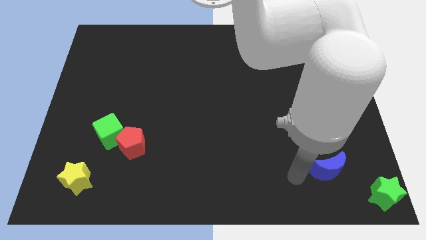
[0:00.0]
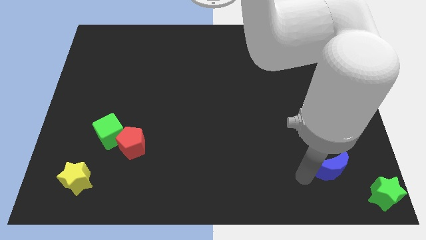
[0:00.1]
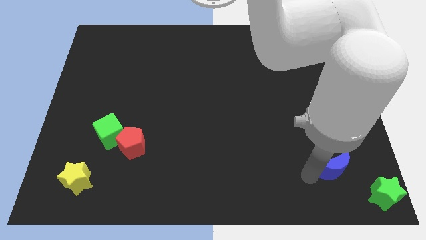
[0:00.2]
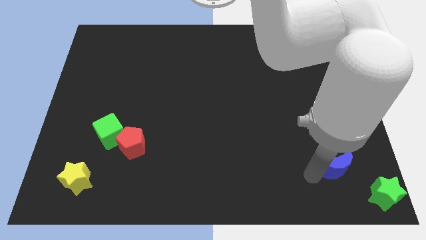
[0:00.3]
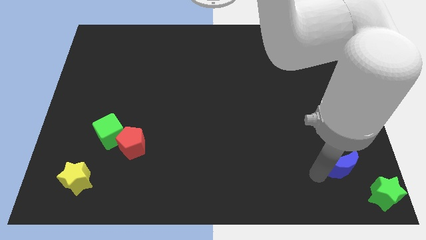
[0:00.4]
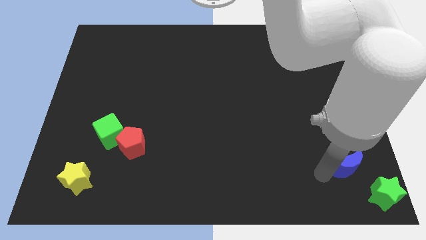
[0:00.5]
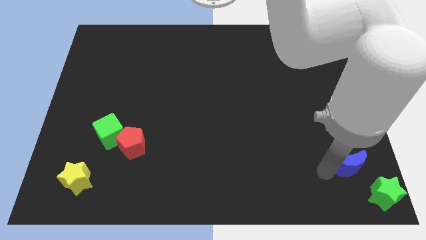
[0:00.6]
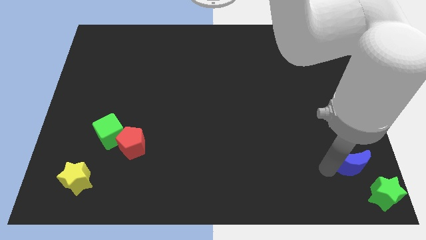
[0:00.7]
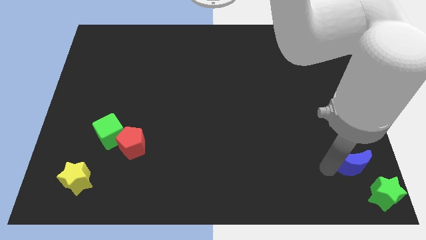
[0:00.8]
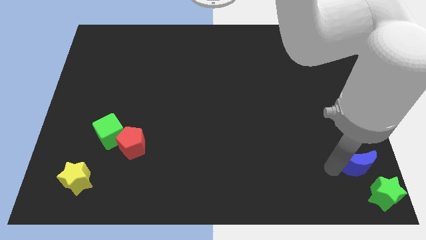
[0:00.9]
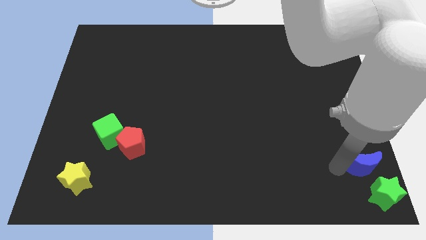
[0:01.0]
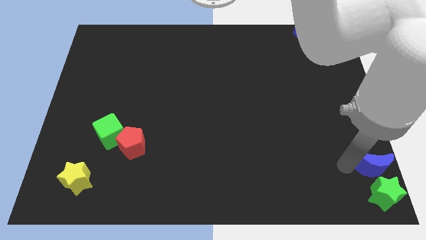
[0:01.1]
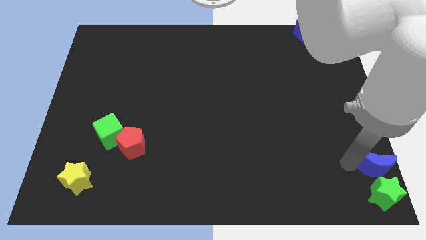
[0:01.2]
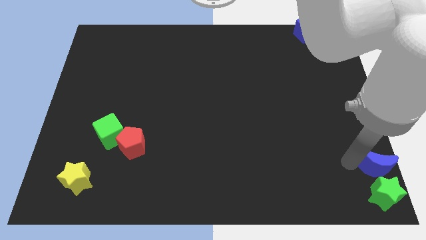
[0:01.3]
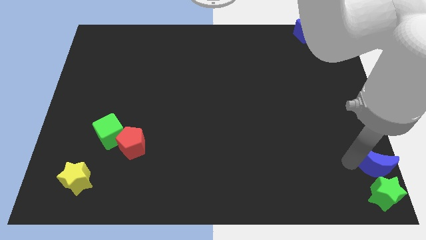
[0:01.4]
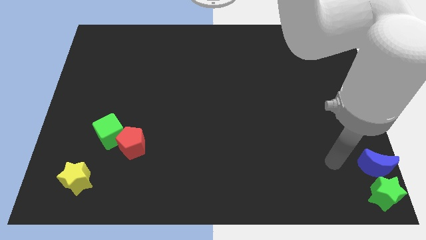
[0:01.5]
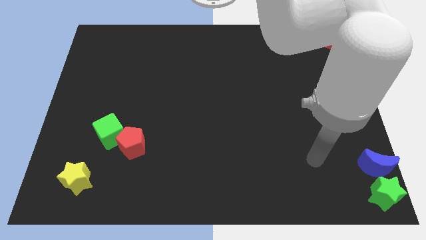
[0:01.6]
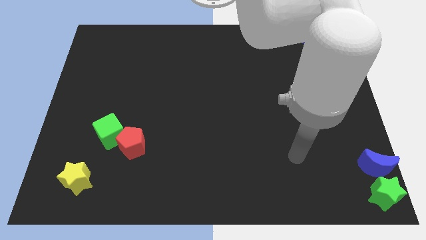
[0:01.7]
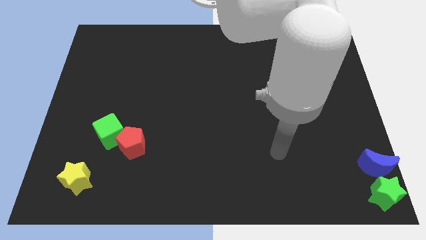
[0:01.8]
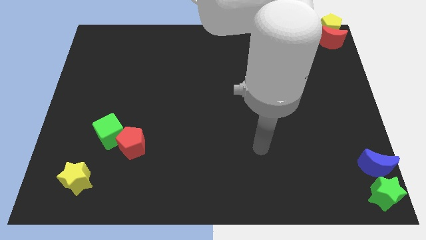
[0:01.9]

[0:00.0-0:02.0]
put the blue cube at the bottom right corner

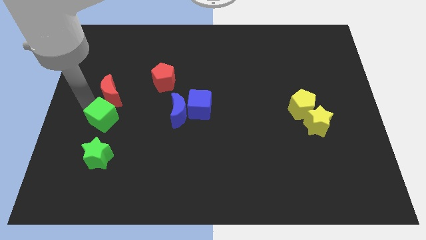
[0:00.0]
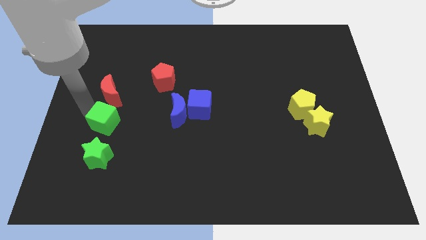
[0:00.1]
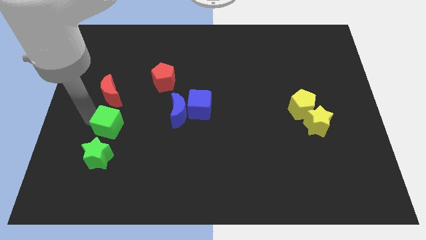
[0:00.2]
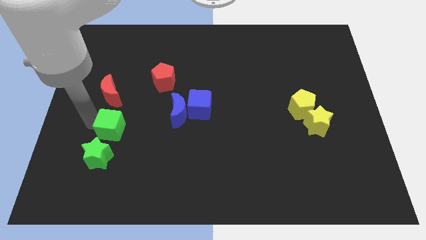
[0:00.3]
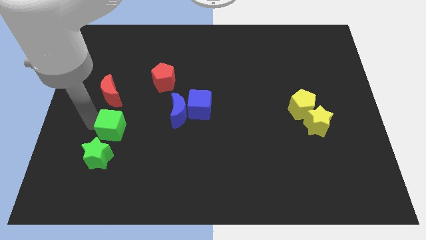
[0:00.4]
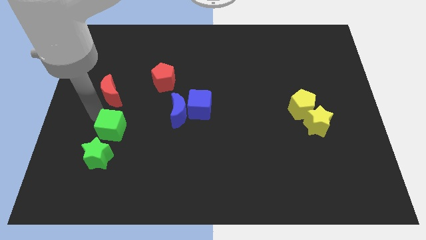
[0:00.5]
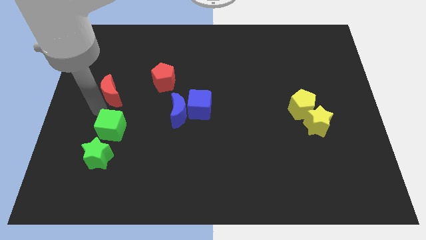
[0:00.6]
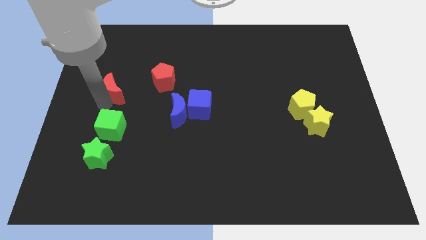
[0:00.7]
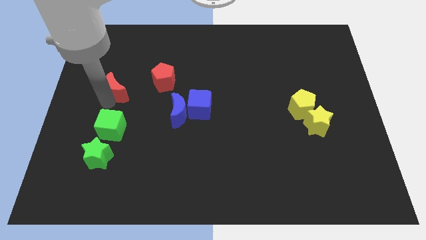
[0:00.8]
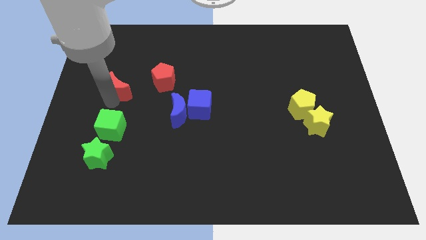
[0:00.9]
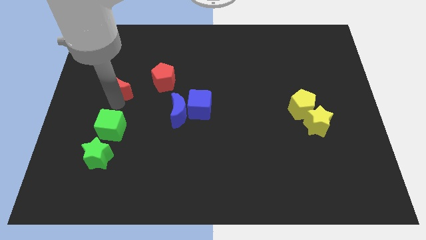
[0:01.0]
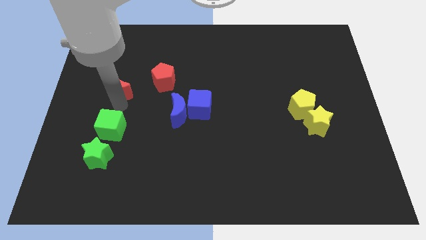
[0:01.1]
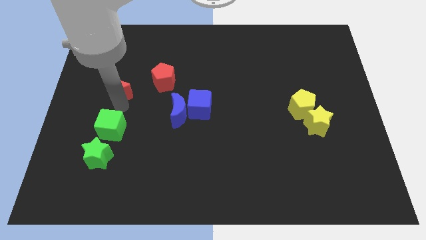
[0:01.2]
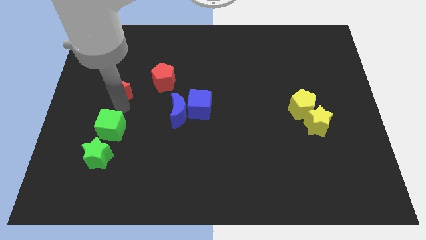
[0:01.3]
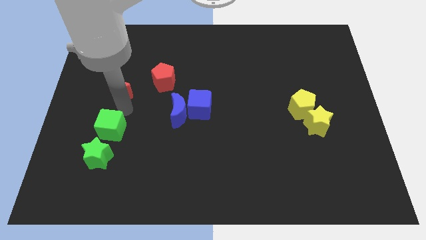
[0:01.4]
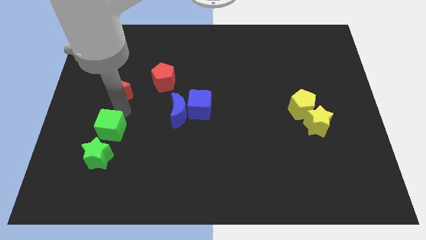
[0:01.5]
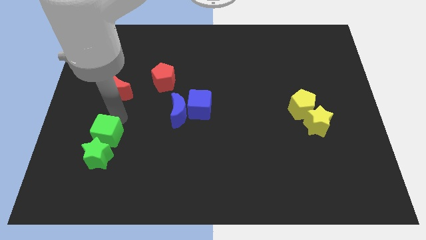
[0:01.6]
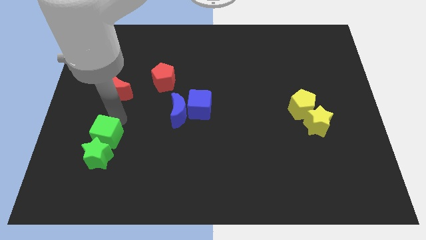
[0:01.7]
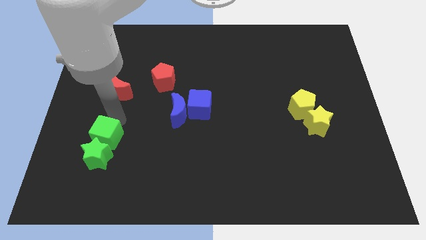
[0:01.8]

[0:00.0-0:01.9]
move the green cube to the top of green star

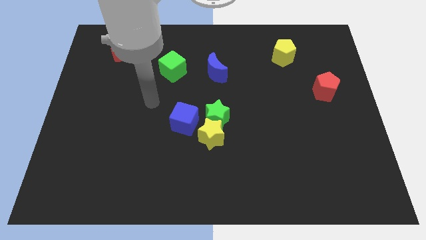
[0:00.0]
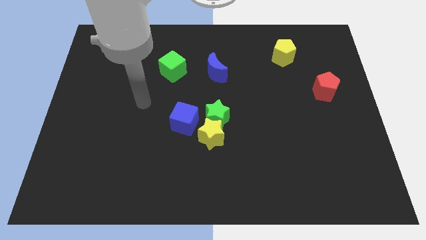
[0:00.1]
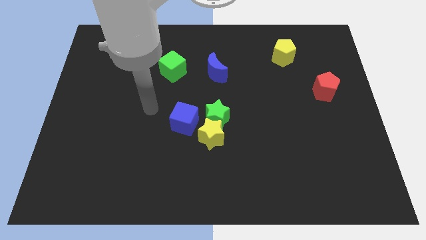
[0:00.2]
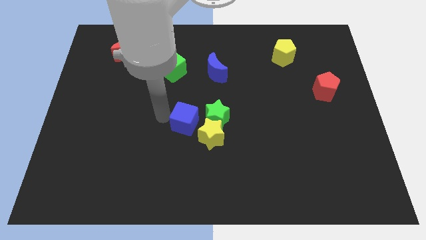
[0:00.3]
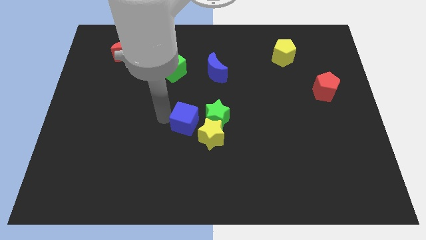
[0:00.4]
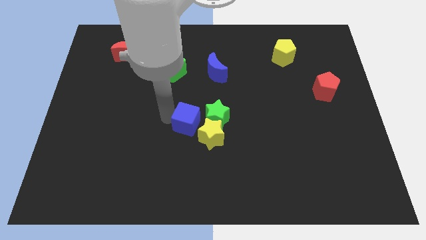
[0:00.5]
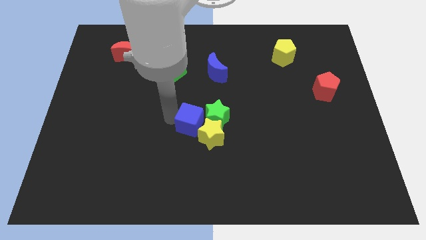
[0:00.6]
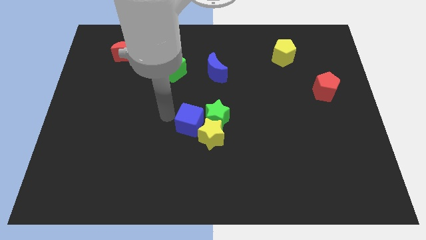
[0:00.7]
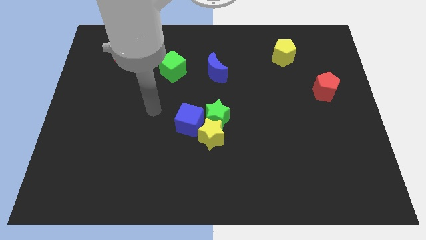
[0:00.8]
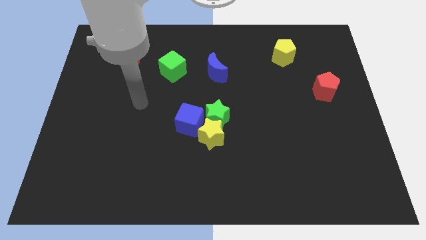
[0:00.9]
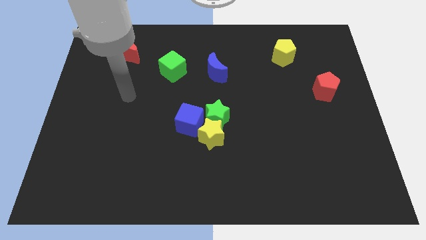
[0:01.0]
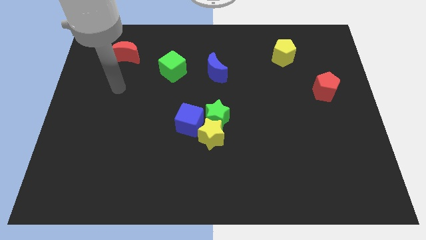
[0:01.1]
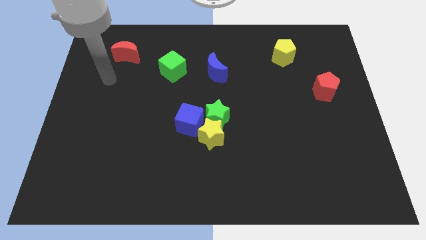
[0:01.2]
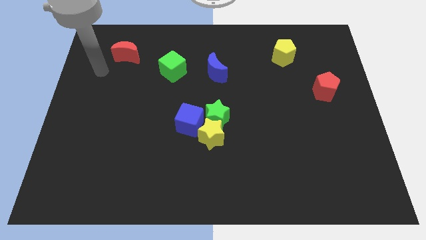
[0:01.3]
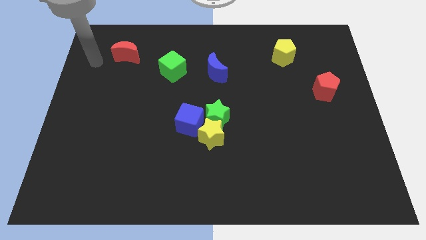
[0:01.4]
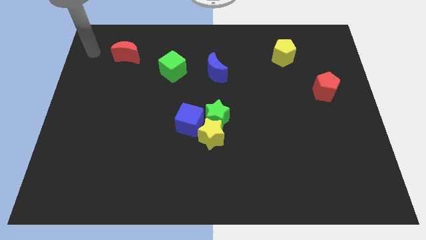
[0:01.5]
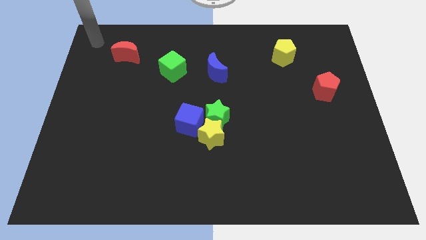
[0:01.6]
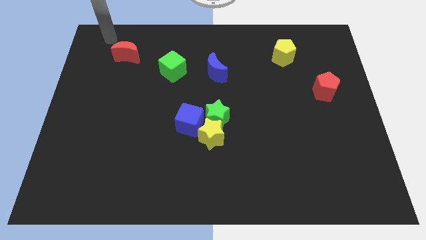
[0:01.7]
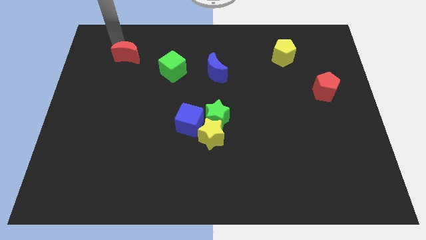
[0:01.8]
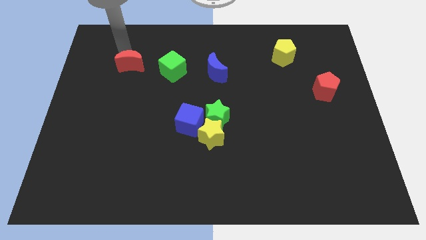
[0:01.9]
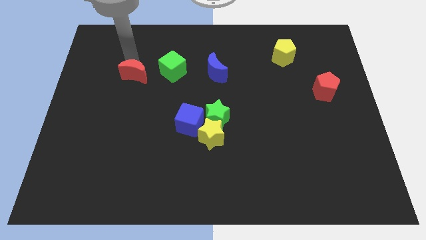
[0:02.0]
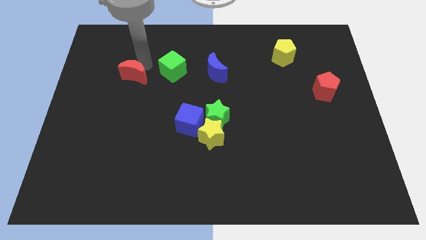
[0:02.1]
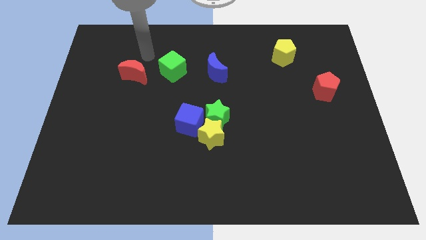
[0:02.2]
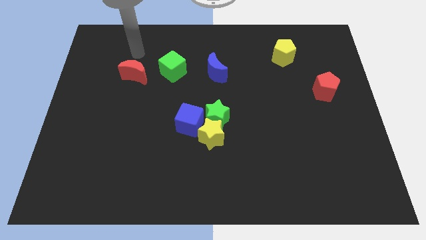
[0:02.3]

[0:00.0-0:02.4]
slightly push the red crescent left side to the green cube

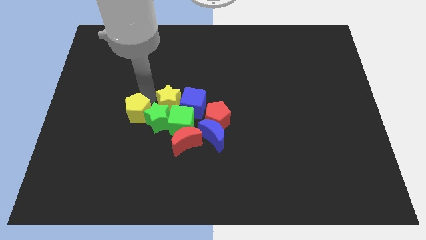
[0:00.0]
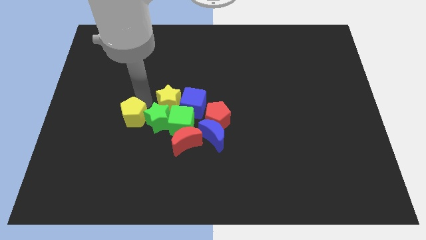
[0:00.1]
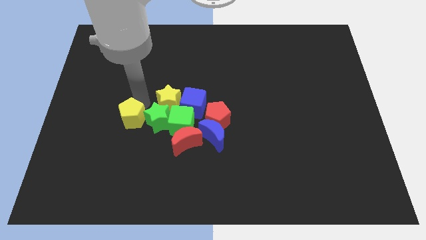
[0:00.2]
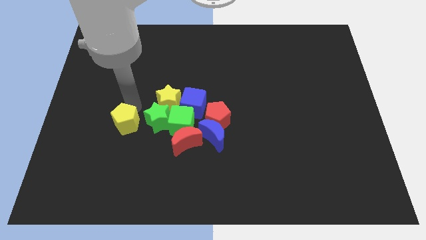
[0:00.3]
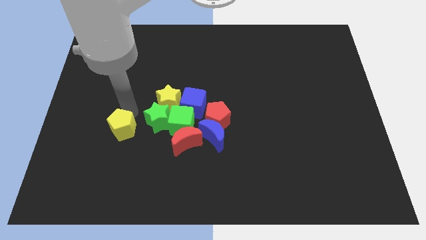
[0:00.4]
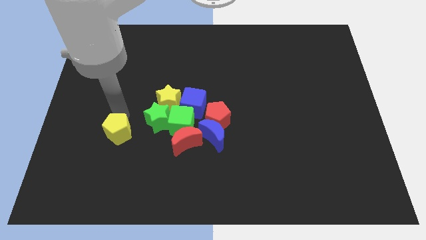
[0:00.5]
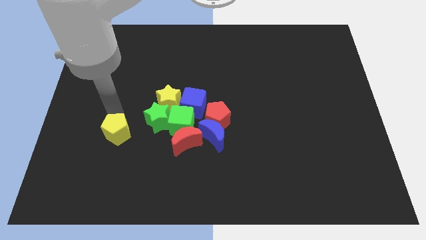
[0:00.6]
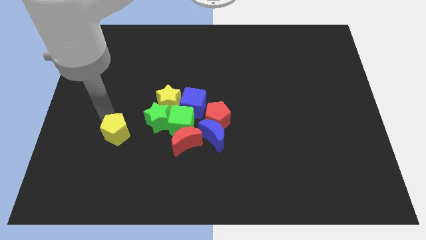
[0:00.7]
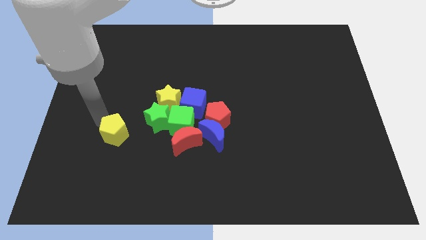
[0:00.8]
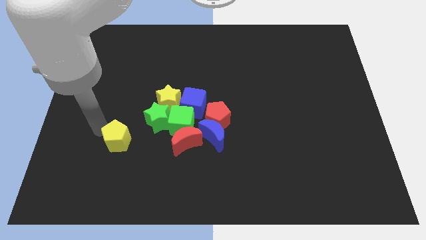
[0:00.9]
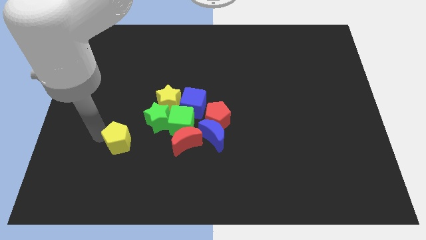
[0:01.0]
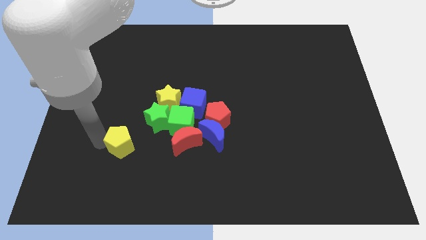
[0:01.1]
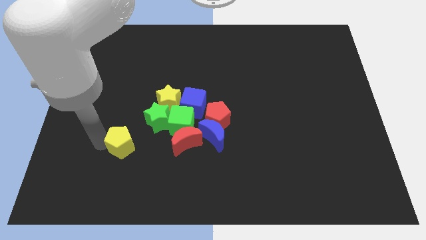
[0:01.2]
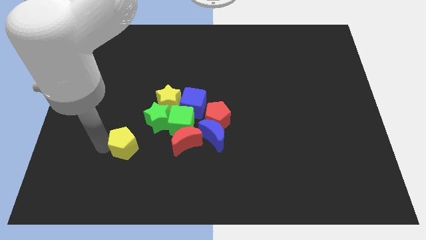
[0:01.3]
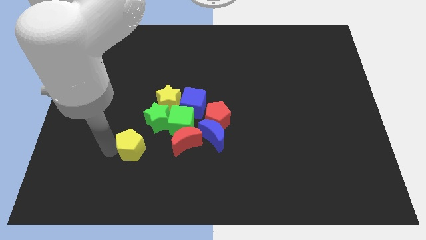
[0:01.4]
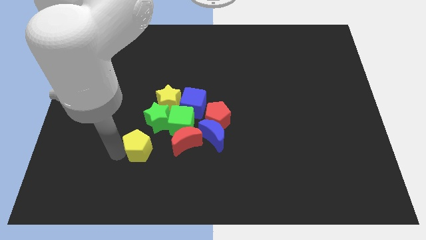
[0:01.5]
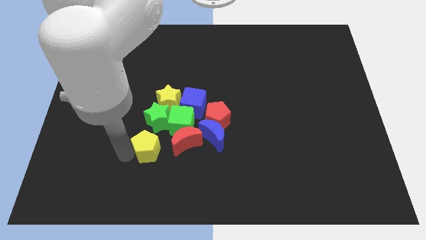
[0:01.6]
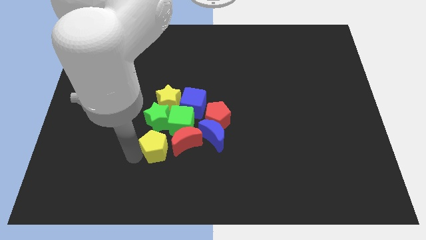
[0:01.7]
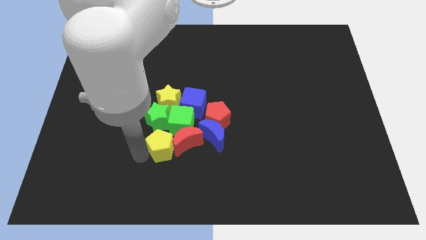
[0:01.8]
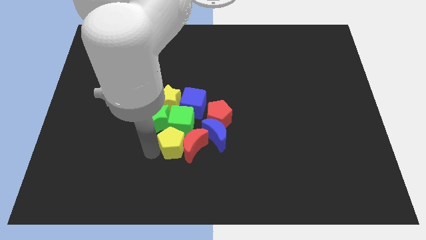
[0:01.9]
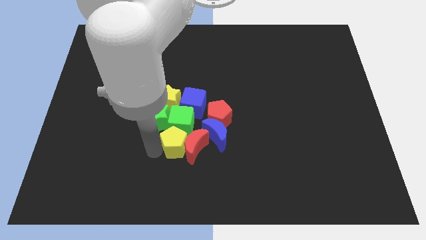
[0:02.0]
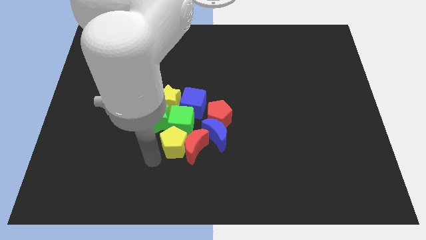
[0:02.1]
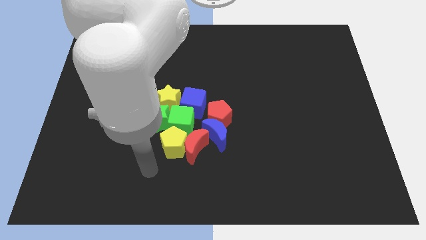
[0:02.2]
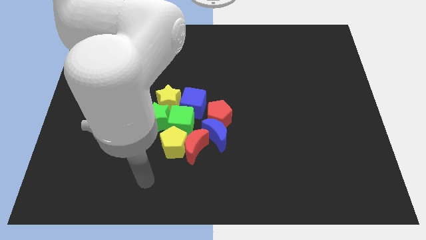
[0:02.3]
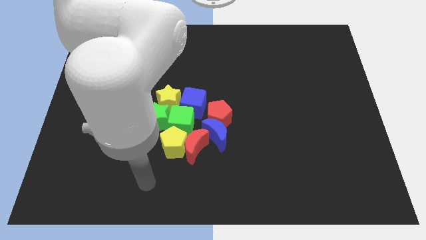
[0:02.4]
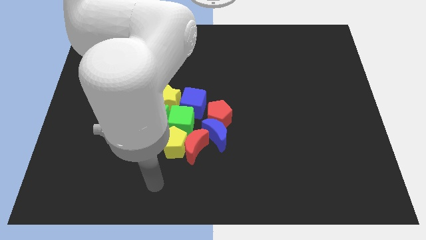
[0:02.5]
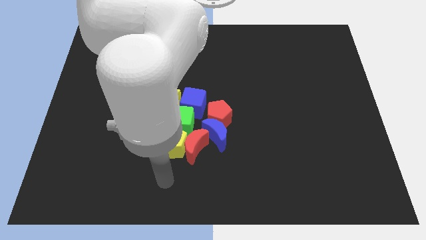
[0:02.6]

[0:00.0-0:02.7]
place yellow pentagon beside red moon
